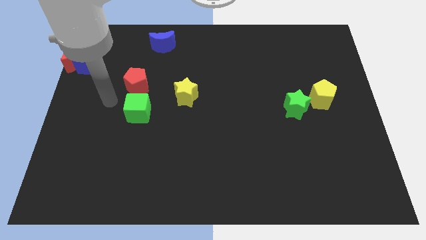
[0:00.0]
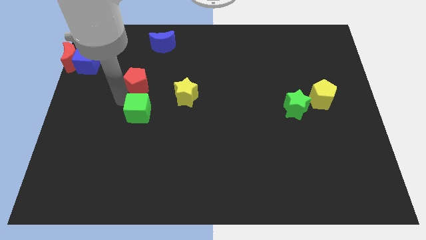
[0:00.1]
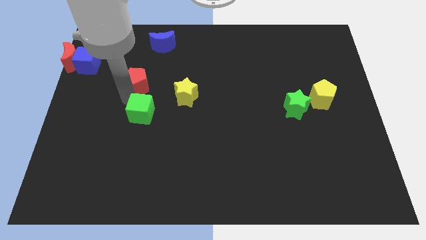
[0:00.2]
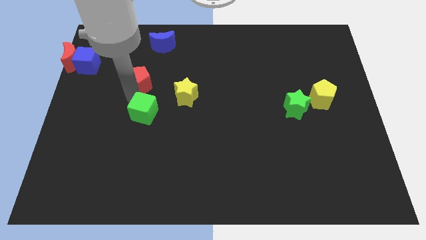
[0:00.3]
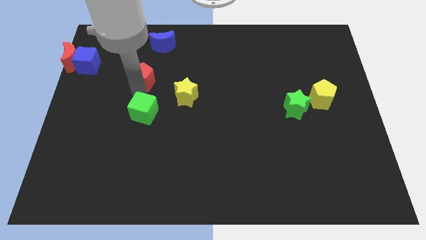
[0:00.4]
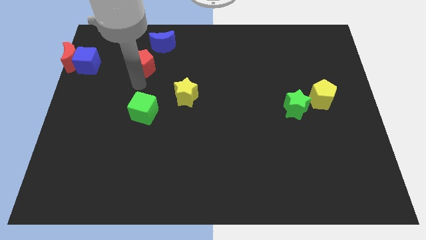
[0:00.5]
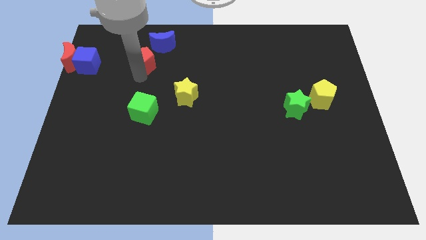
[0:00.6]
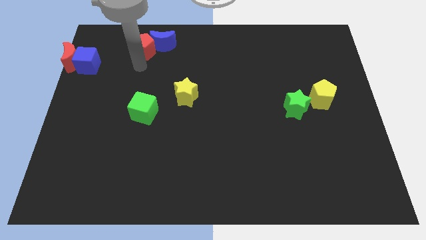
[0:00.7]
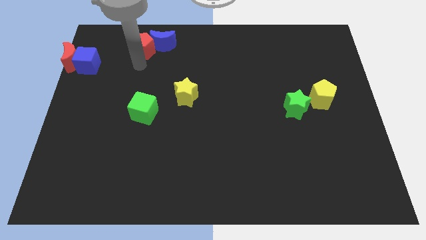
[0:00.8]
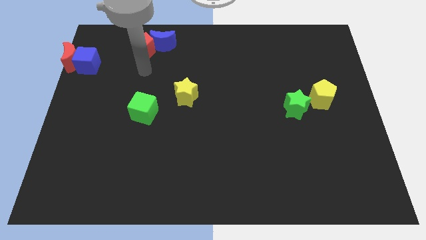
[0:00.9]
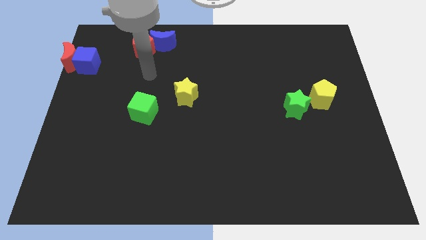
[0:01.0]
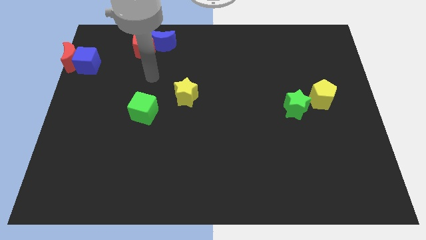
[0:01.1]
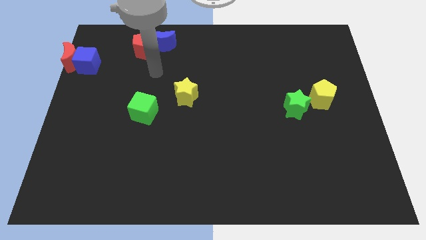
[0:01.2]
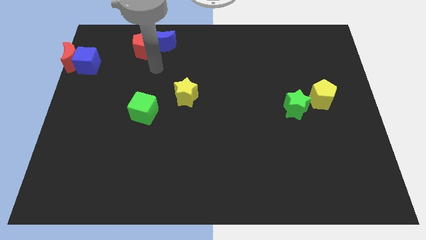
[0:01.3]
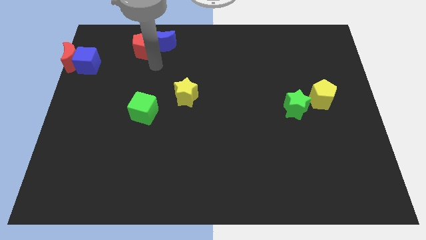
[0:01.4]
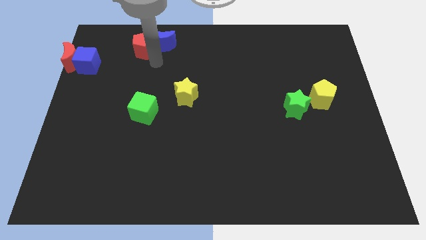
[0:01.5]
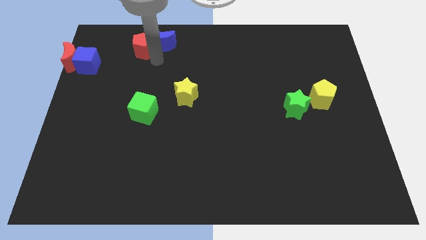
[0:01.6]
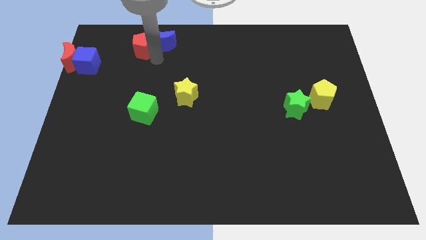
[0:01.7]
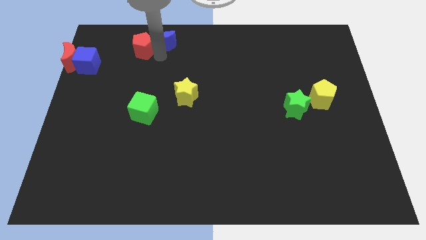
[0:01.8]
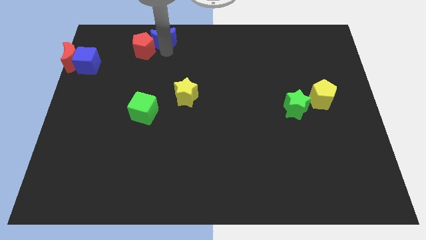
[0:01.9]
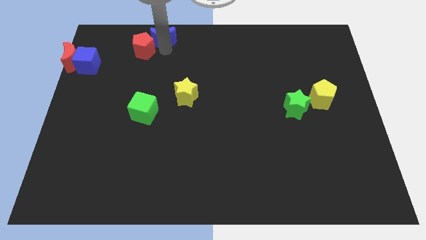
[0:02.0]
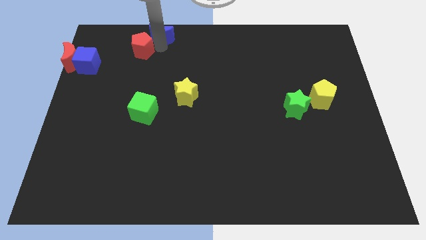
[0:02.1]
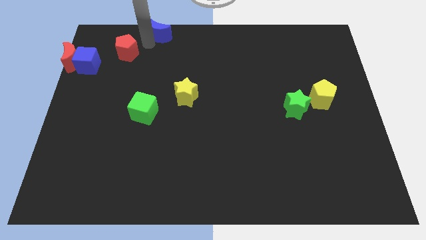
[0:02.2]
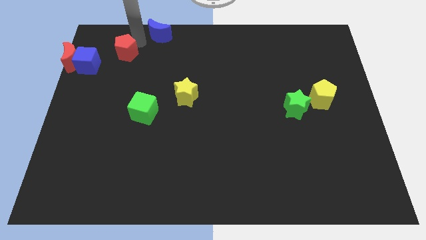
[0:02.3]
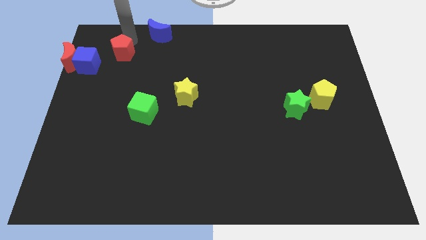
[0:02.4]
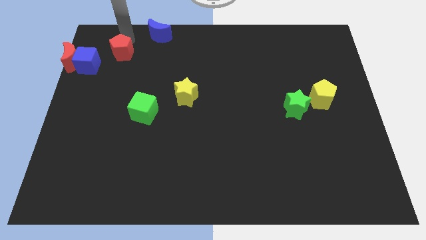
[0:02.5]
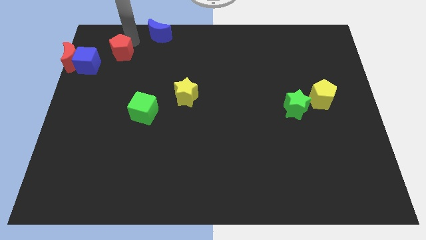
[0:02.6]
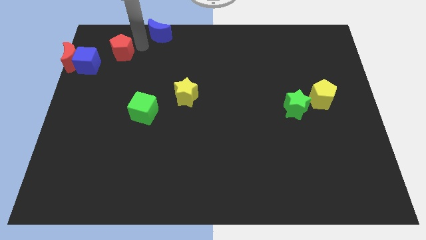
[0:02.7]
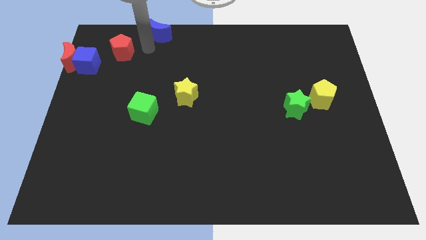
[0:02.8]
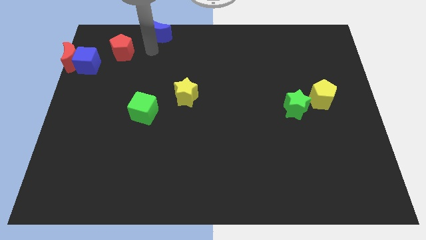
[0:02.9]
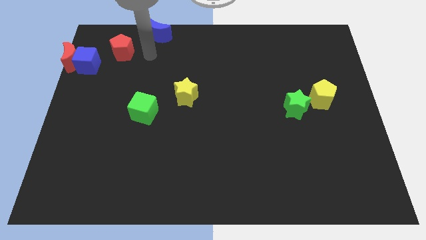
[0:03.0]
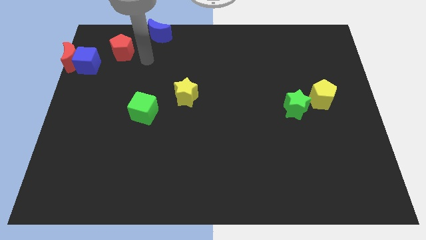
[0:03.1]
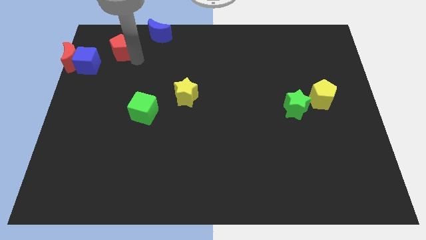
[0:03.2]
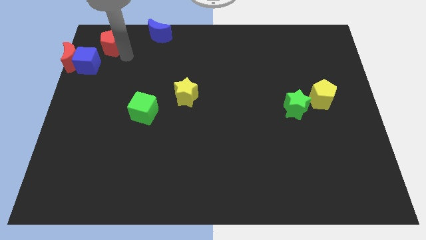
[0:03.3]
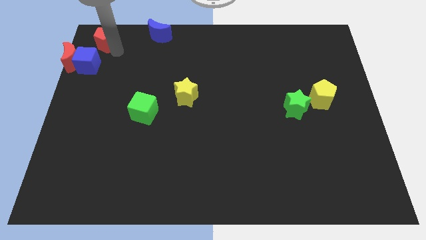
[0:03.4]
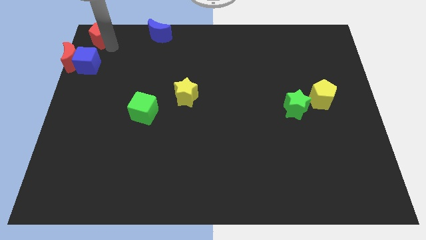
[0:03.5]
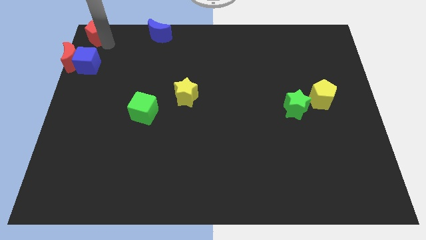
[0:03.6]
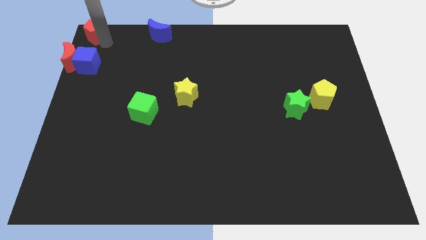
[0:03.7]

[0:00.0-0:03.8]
separate the red pentagon and green cube

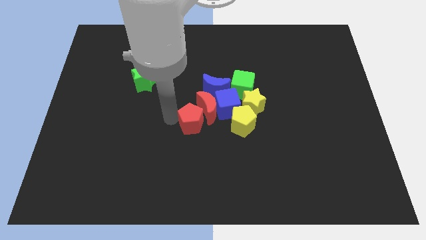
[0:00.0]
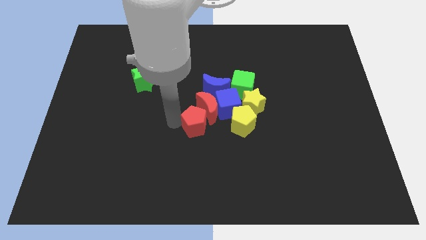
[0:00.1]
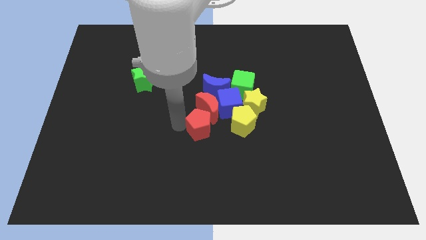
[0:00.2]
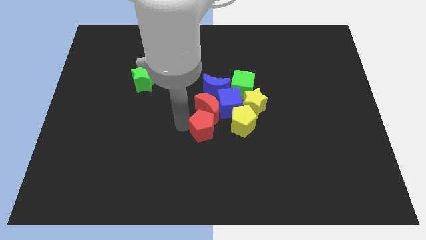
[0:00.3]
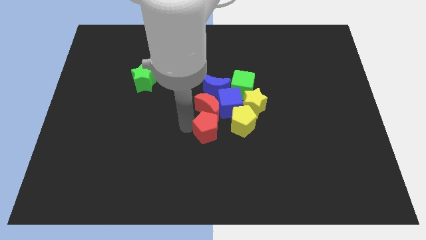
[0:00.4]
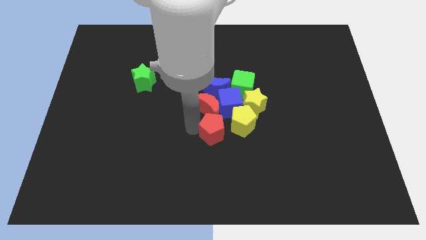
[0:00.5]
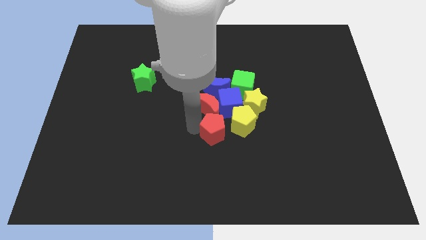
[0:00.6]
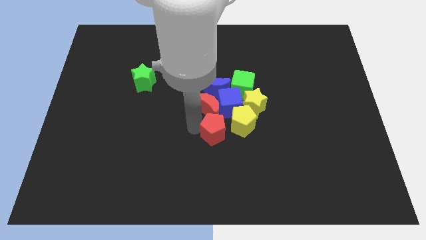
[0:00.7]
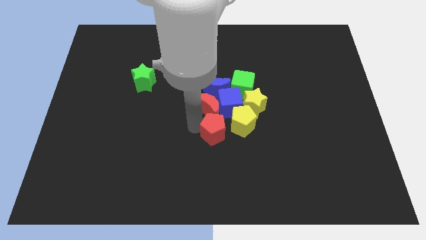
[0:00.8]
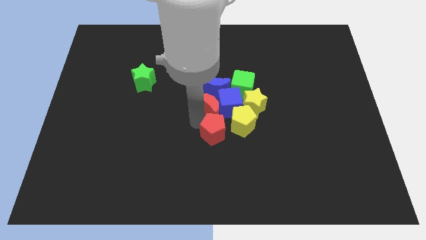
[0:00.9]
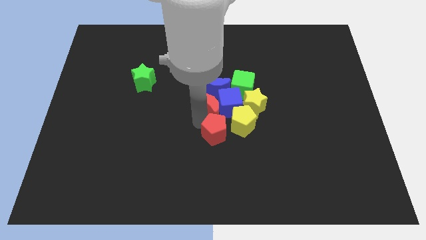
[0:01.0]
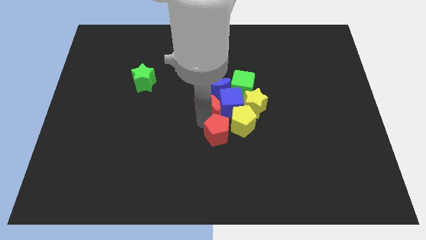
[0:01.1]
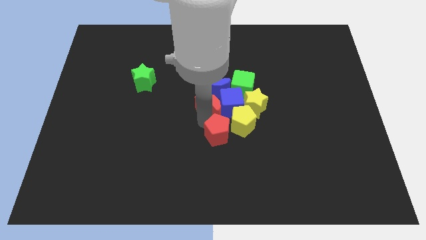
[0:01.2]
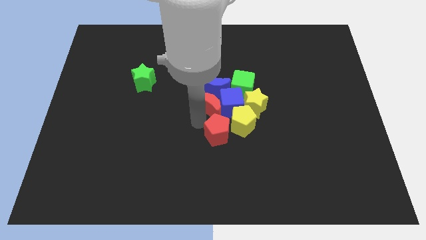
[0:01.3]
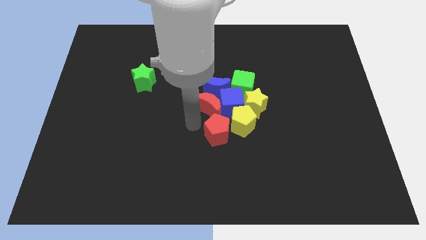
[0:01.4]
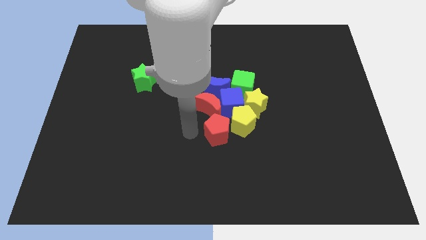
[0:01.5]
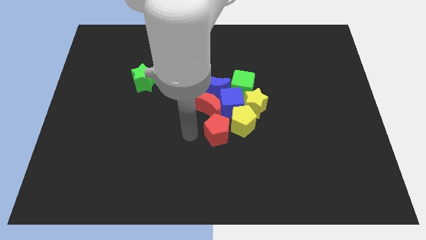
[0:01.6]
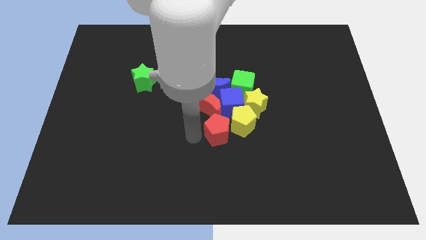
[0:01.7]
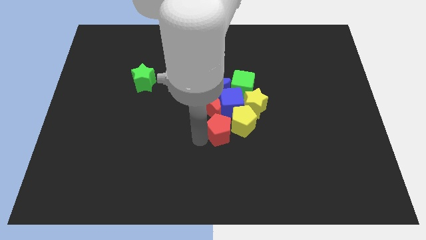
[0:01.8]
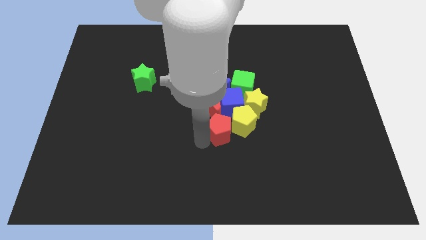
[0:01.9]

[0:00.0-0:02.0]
push the red pentagon towards a group of elements in the center

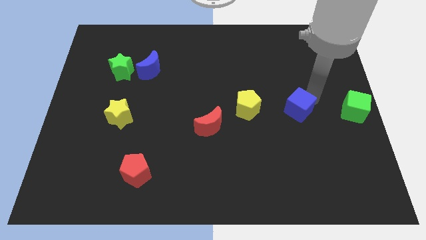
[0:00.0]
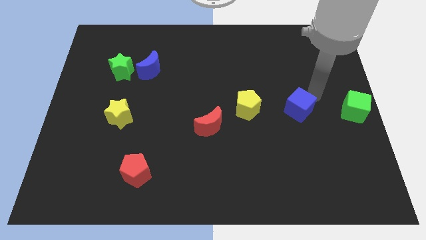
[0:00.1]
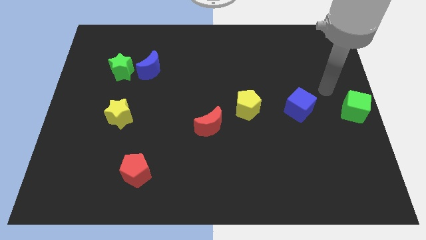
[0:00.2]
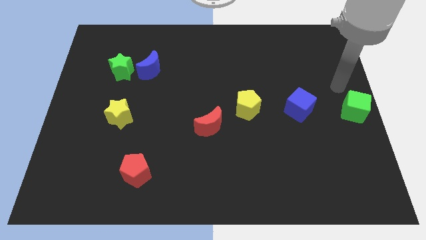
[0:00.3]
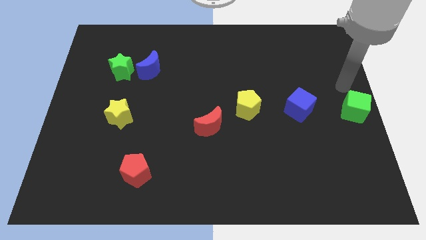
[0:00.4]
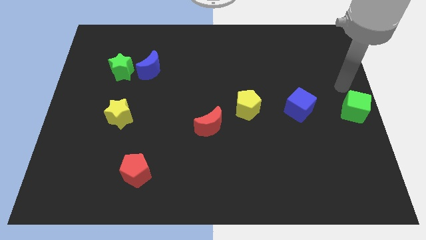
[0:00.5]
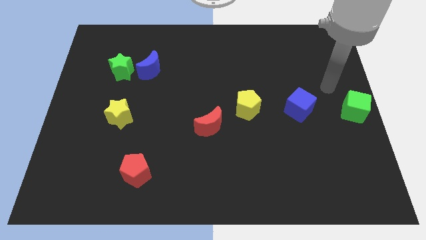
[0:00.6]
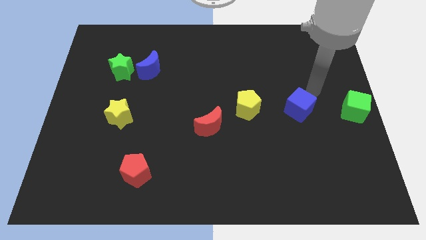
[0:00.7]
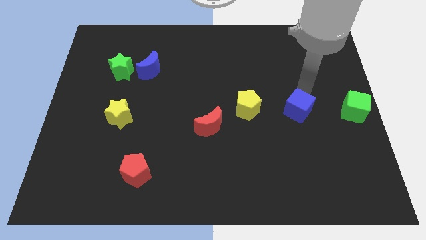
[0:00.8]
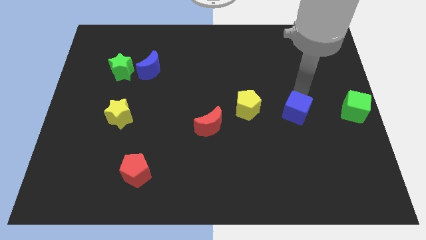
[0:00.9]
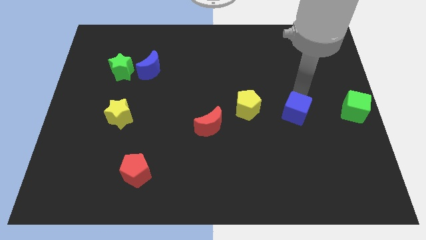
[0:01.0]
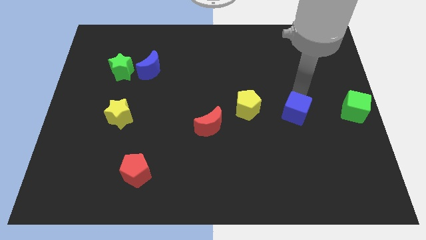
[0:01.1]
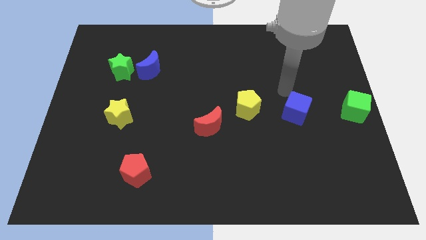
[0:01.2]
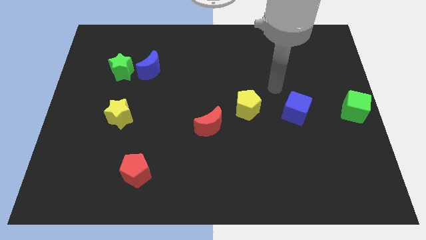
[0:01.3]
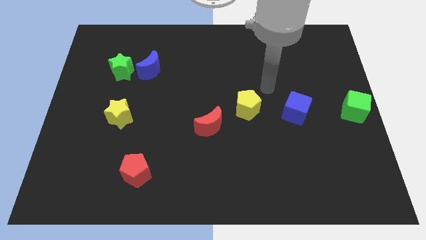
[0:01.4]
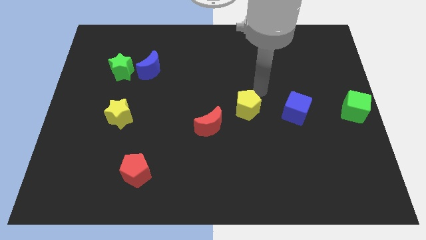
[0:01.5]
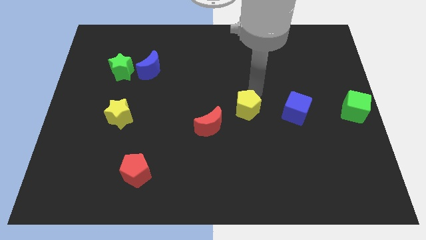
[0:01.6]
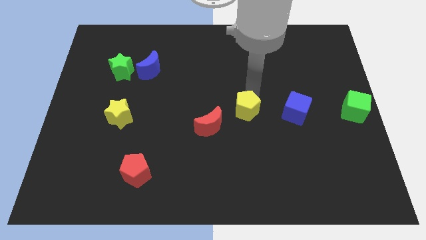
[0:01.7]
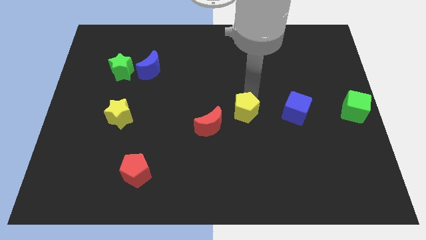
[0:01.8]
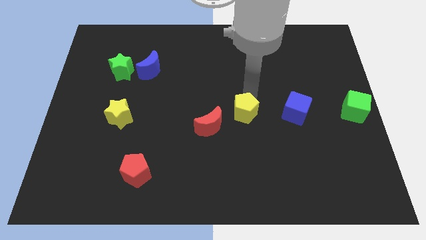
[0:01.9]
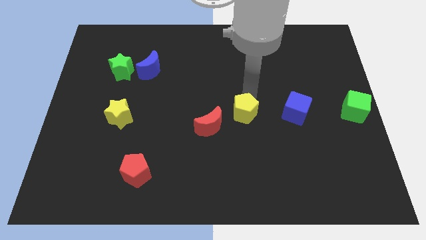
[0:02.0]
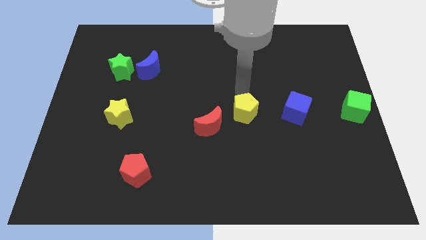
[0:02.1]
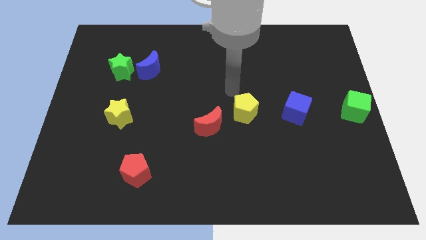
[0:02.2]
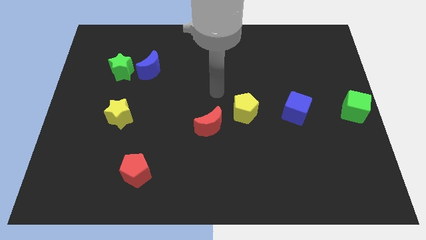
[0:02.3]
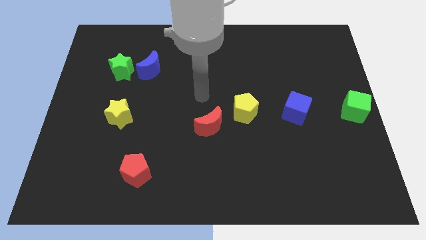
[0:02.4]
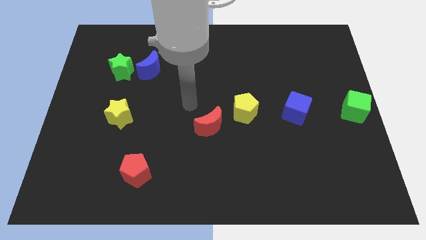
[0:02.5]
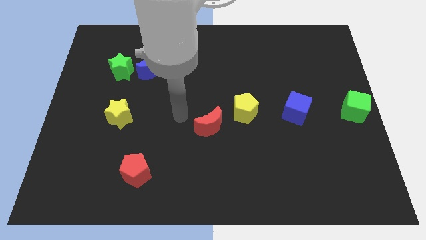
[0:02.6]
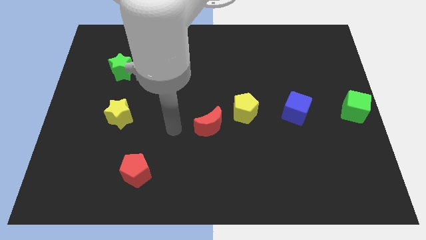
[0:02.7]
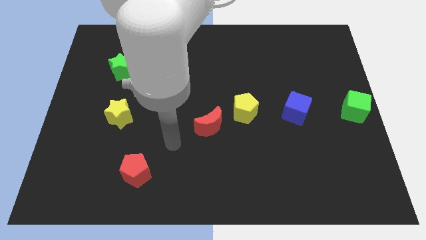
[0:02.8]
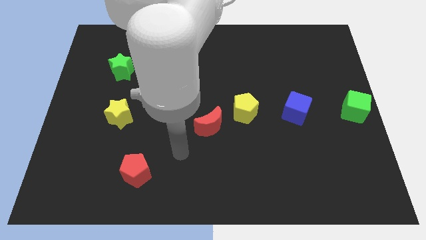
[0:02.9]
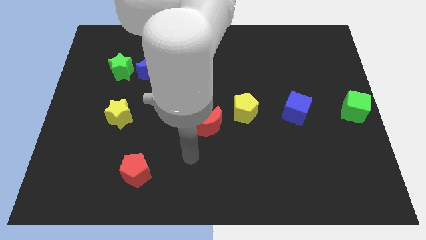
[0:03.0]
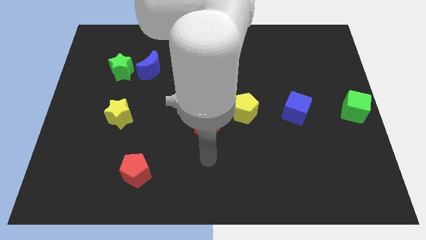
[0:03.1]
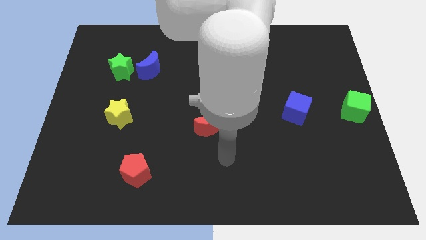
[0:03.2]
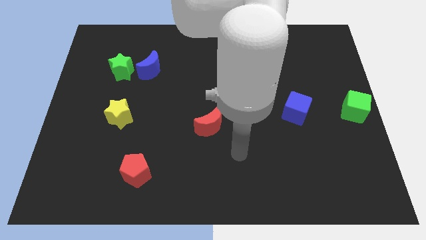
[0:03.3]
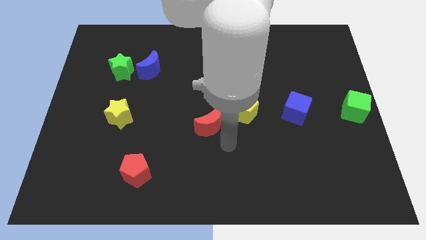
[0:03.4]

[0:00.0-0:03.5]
move your arm below the red crescent
